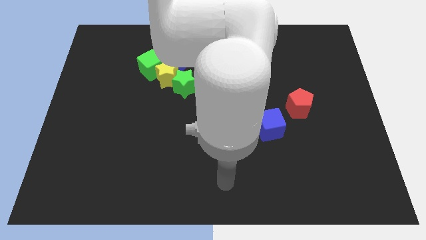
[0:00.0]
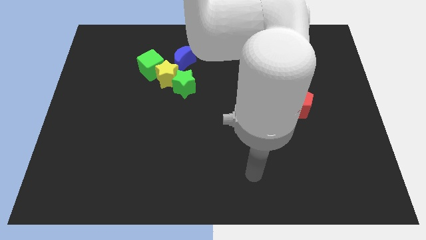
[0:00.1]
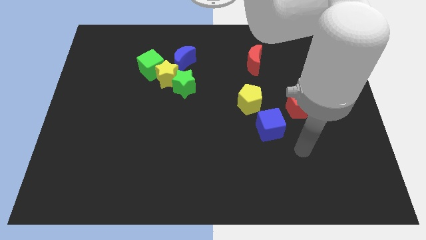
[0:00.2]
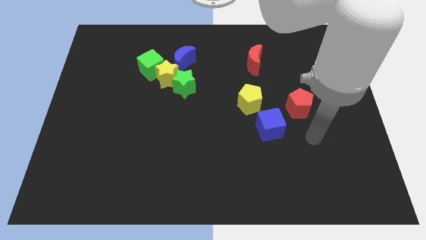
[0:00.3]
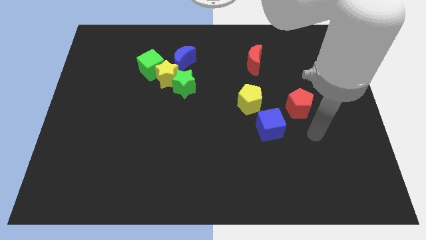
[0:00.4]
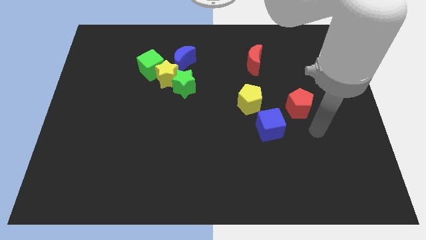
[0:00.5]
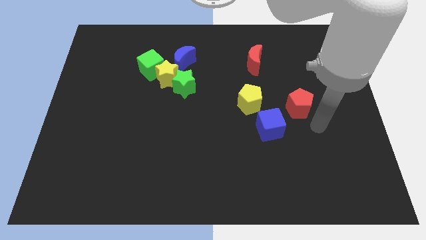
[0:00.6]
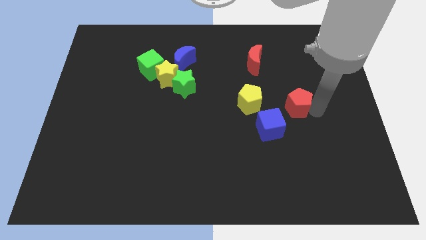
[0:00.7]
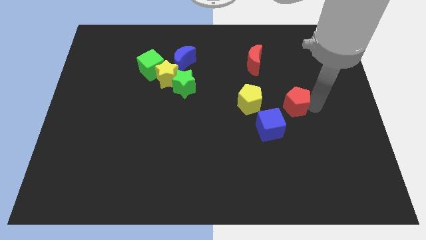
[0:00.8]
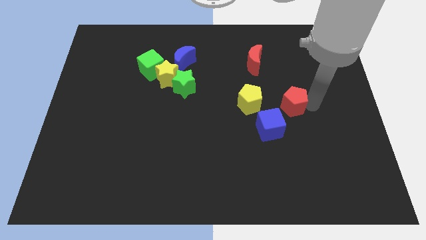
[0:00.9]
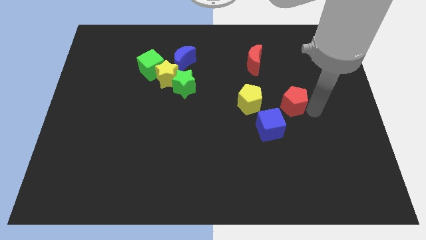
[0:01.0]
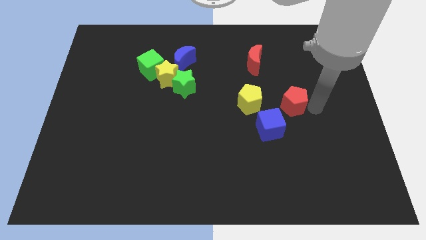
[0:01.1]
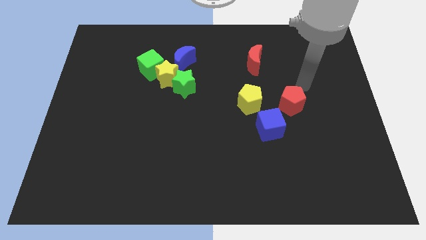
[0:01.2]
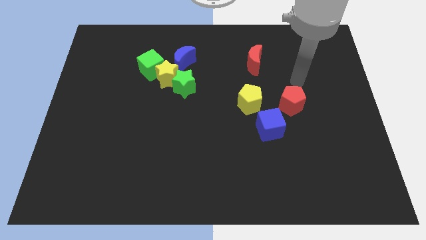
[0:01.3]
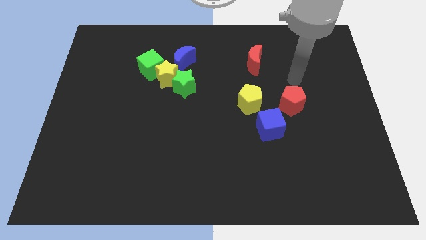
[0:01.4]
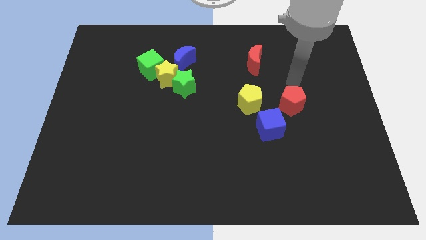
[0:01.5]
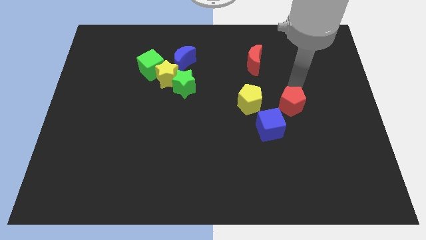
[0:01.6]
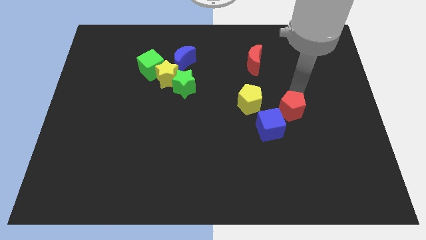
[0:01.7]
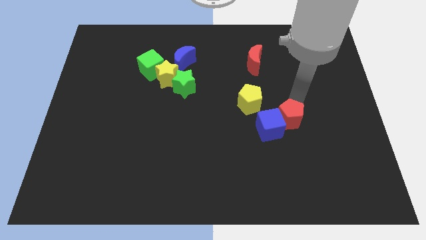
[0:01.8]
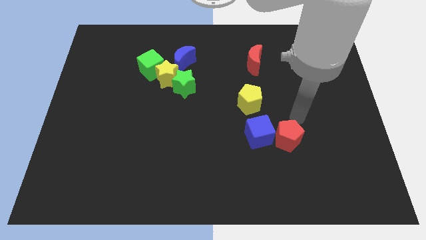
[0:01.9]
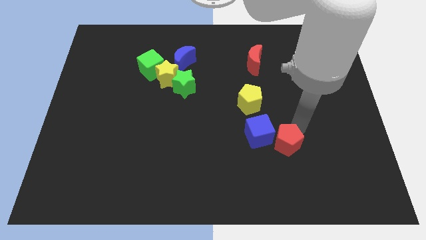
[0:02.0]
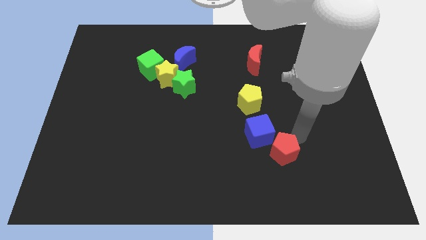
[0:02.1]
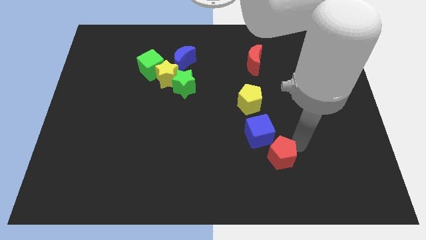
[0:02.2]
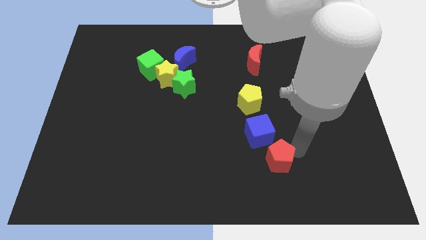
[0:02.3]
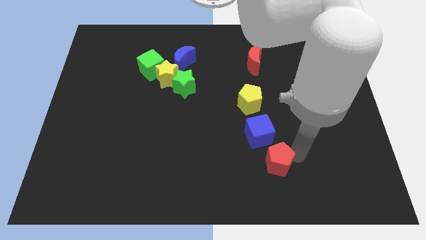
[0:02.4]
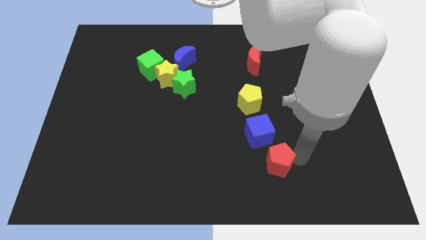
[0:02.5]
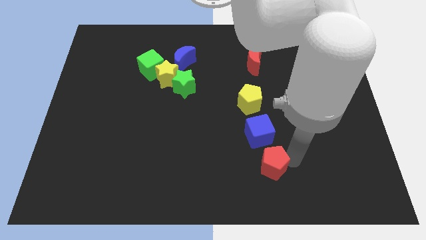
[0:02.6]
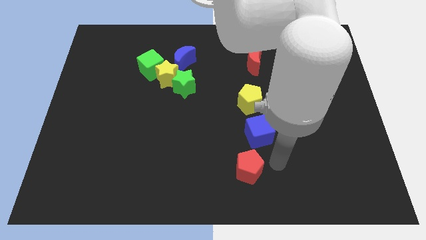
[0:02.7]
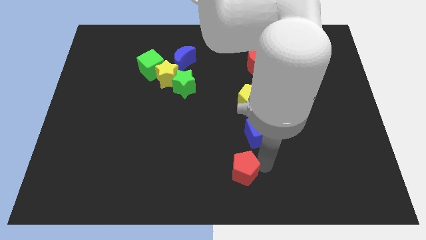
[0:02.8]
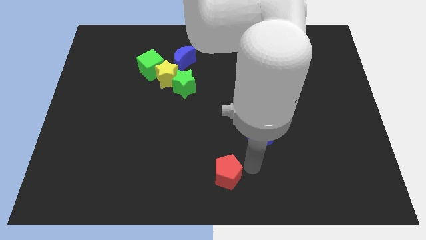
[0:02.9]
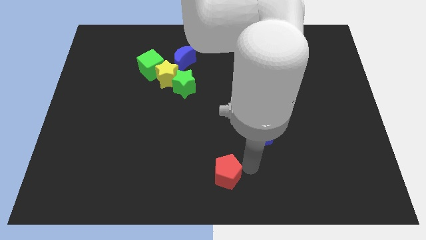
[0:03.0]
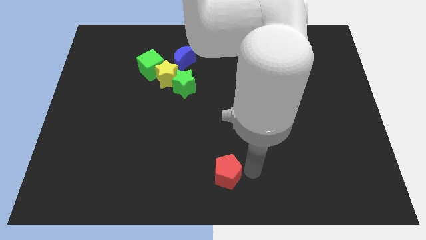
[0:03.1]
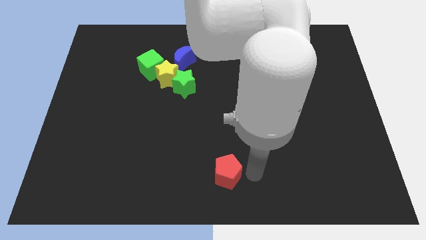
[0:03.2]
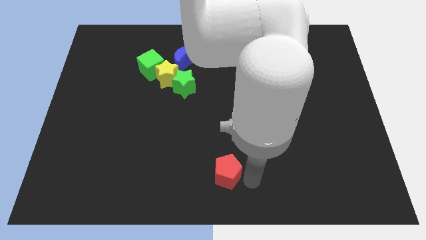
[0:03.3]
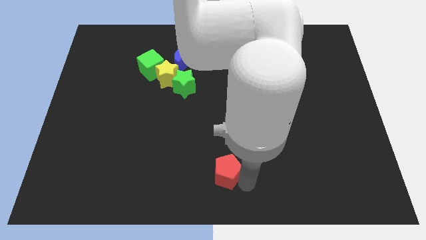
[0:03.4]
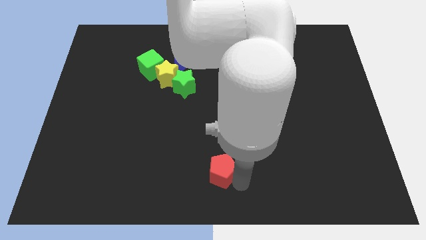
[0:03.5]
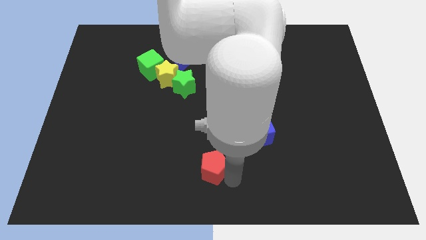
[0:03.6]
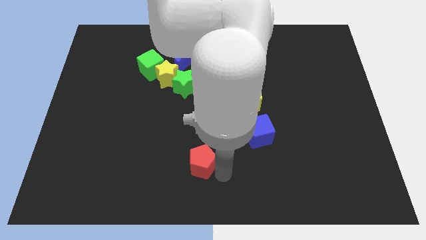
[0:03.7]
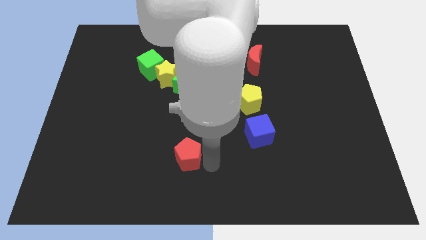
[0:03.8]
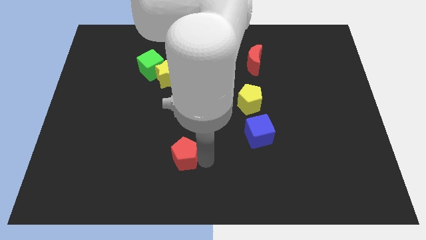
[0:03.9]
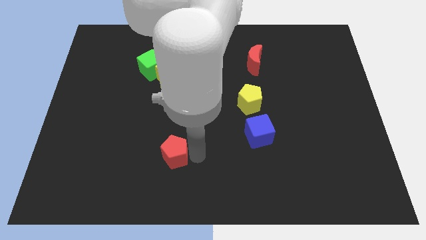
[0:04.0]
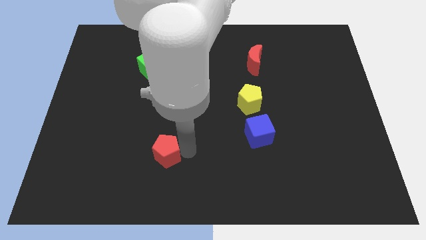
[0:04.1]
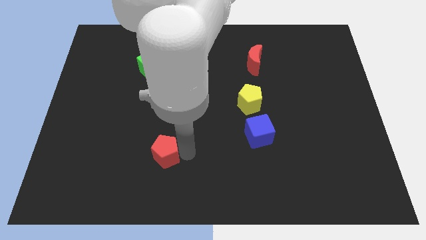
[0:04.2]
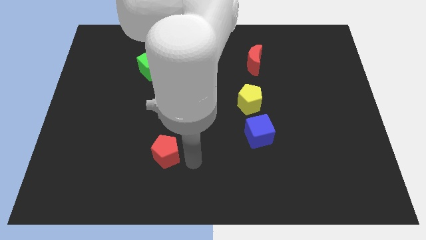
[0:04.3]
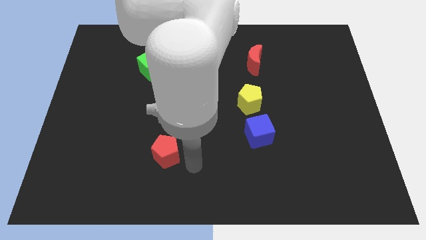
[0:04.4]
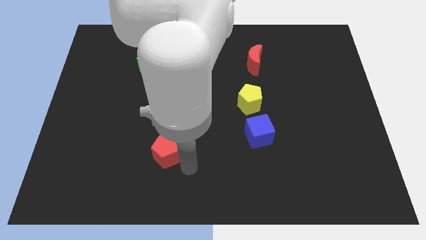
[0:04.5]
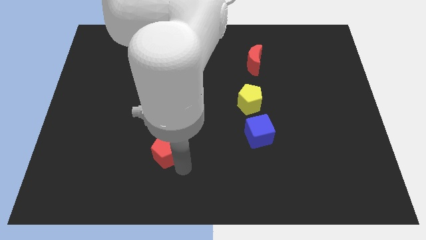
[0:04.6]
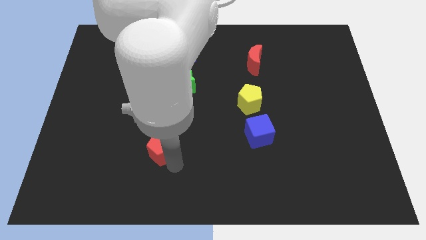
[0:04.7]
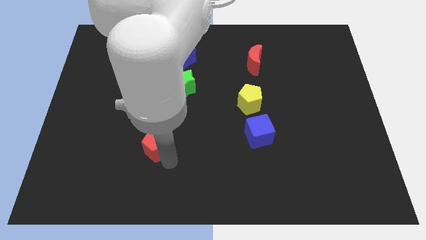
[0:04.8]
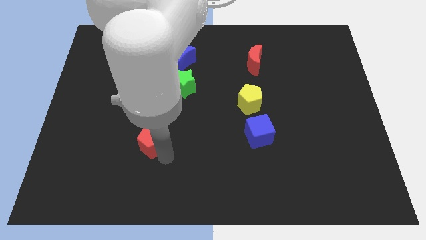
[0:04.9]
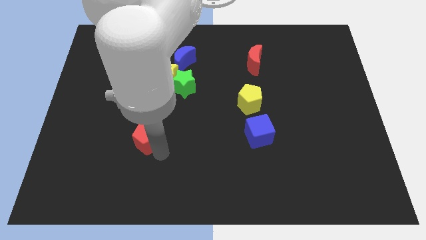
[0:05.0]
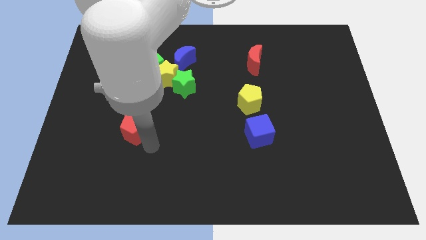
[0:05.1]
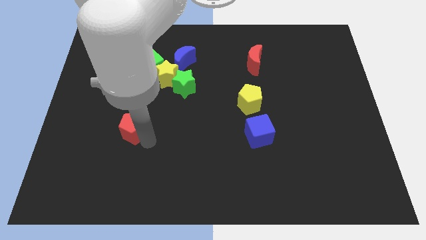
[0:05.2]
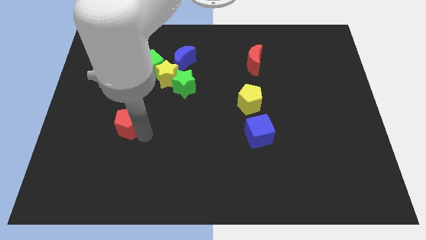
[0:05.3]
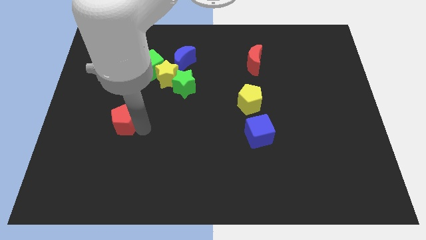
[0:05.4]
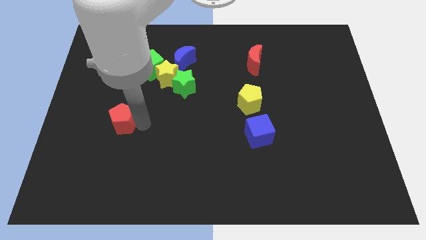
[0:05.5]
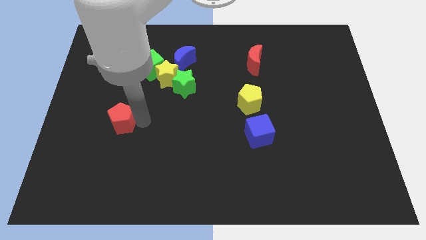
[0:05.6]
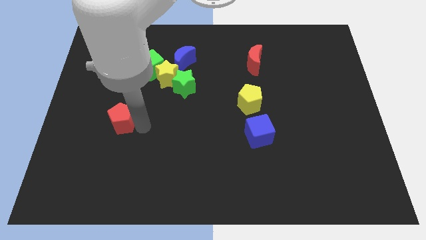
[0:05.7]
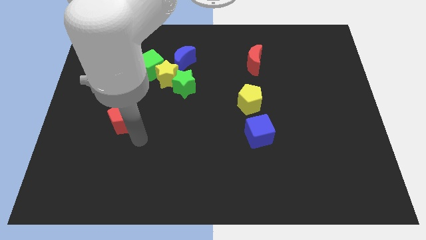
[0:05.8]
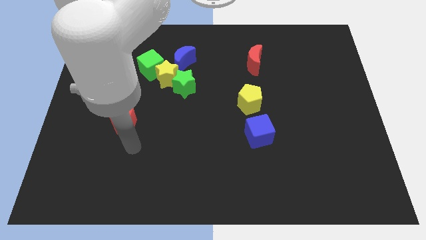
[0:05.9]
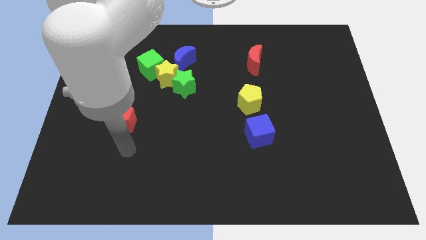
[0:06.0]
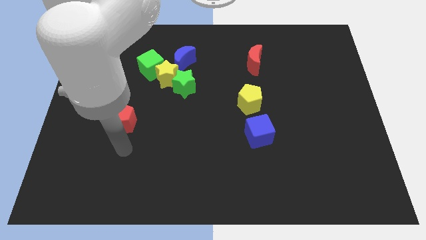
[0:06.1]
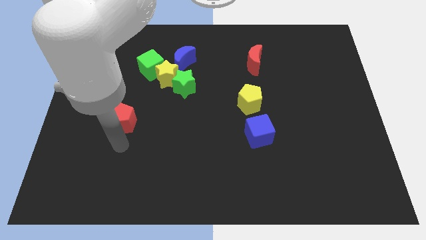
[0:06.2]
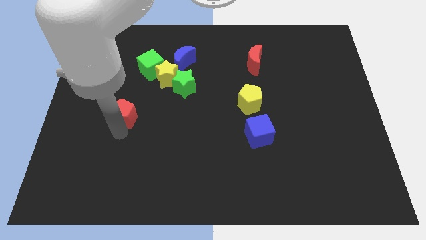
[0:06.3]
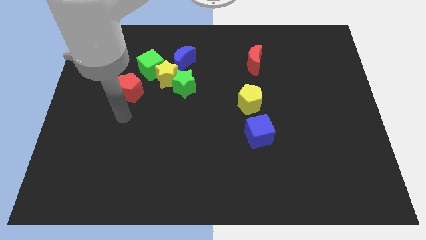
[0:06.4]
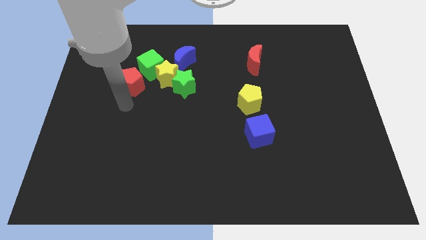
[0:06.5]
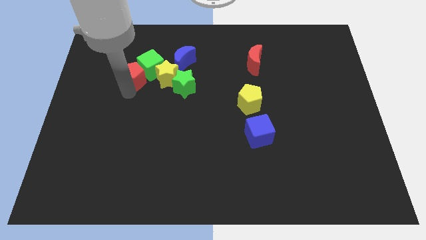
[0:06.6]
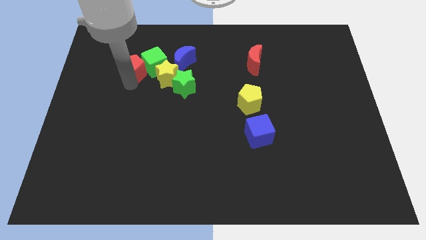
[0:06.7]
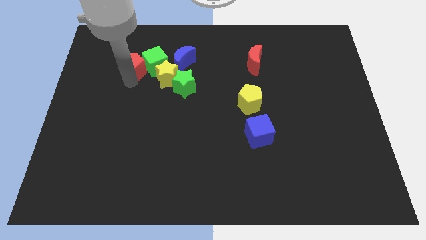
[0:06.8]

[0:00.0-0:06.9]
put the red pentagon to the green cube

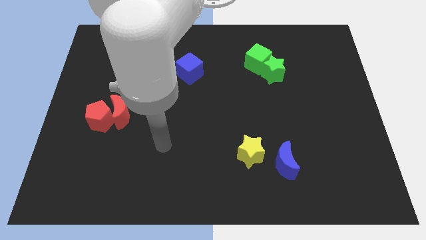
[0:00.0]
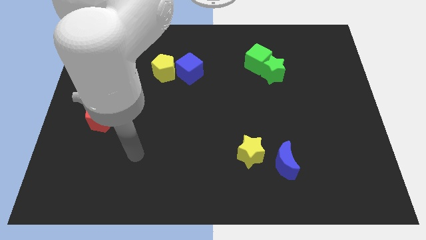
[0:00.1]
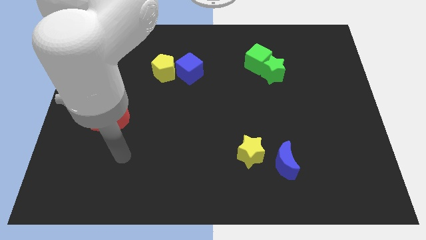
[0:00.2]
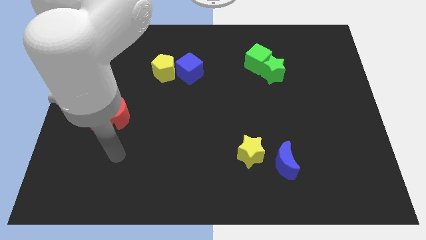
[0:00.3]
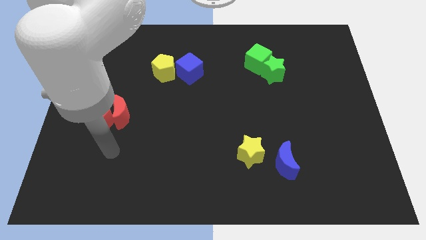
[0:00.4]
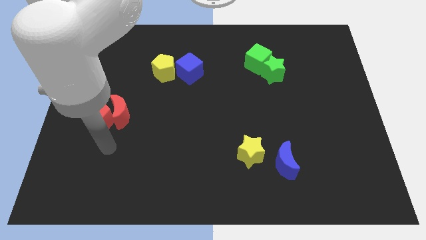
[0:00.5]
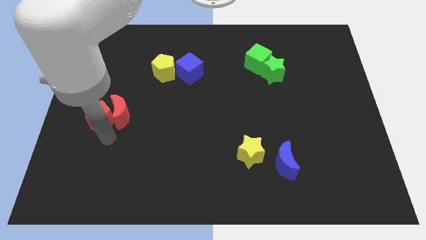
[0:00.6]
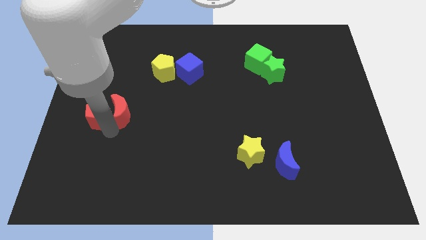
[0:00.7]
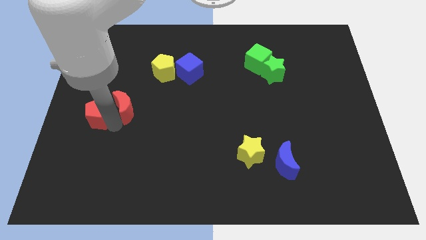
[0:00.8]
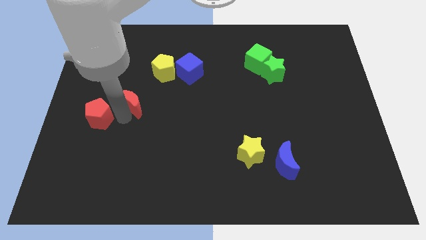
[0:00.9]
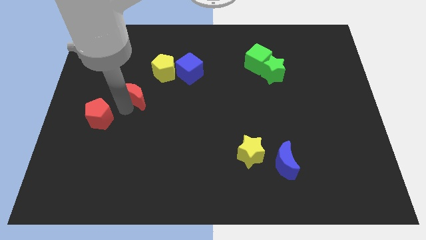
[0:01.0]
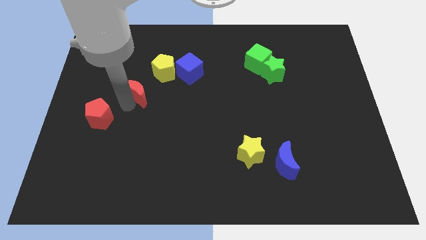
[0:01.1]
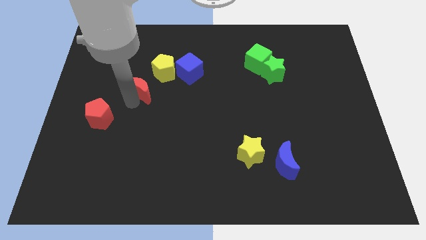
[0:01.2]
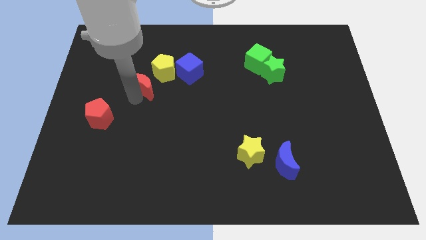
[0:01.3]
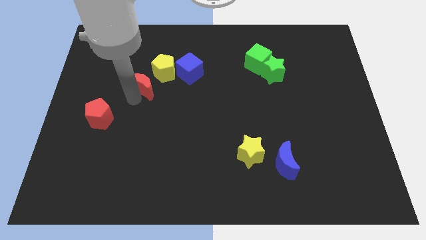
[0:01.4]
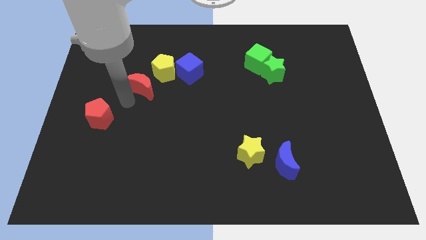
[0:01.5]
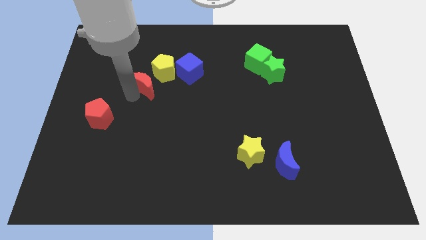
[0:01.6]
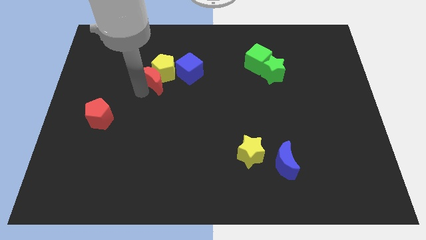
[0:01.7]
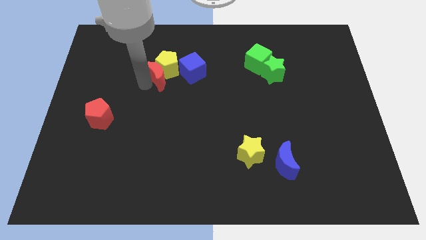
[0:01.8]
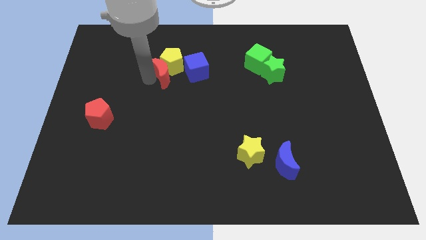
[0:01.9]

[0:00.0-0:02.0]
put the red moon close to the yellow pentagon
